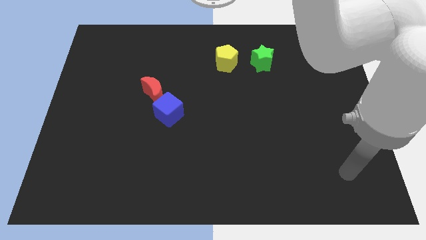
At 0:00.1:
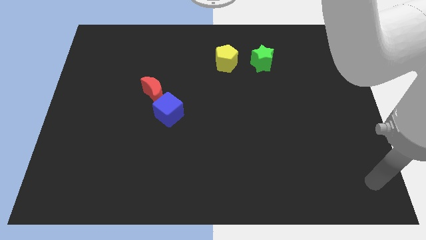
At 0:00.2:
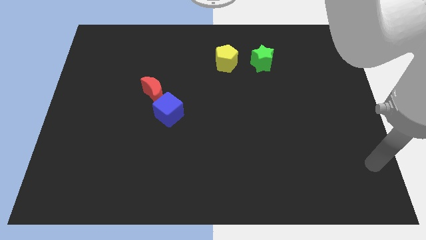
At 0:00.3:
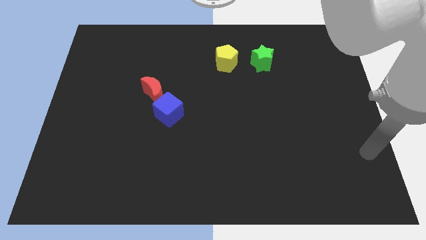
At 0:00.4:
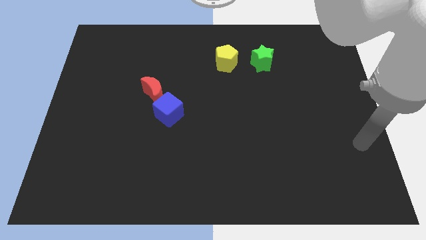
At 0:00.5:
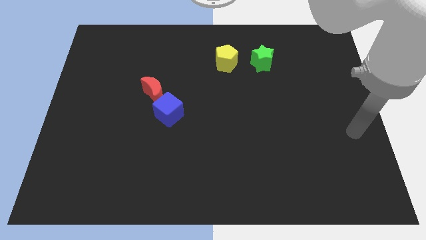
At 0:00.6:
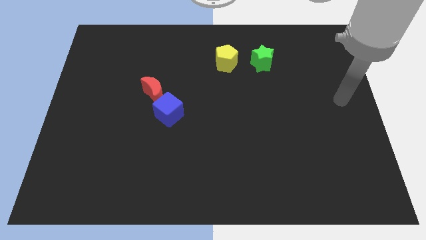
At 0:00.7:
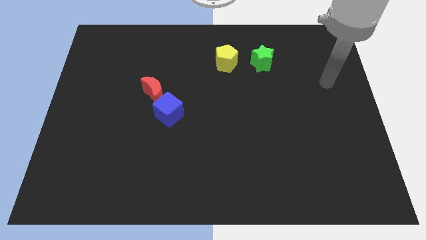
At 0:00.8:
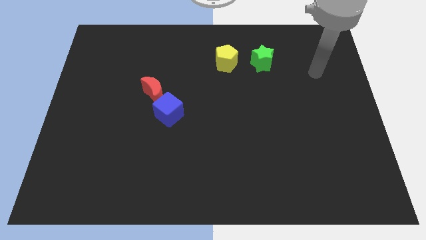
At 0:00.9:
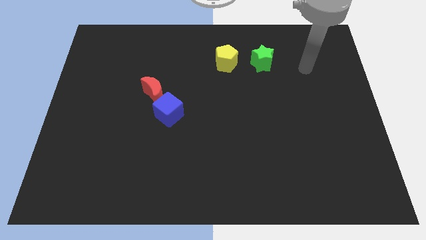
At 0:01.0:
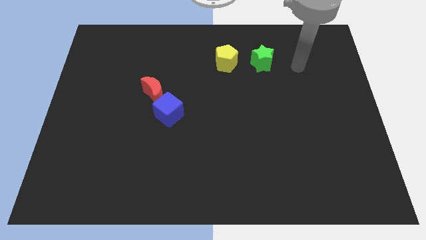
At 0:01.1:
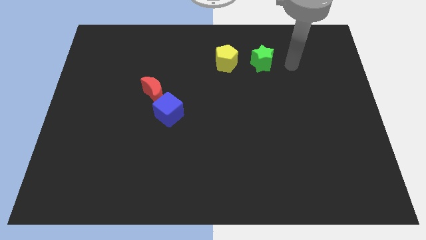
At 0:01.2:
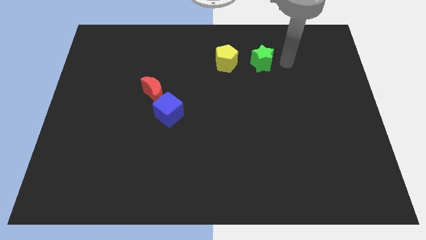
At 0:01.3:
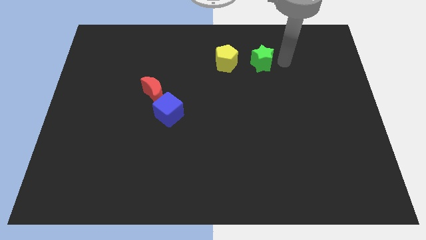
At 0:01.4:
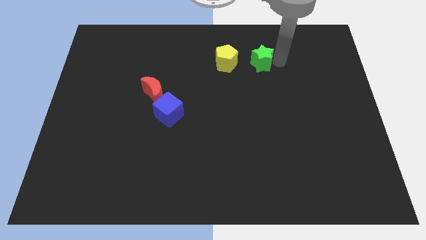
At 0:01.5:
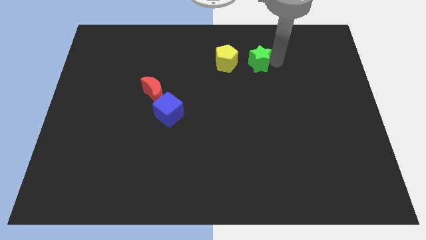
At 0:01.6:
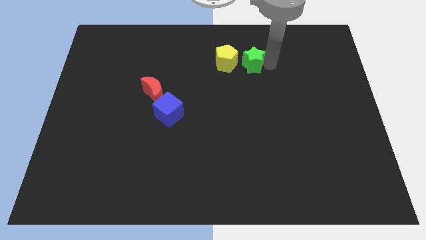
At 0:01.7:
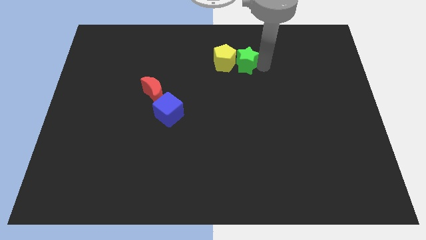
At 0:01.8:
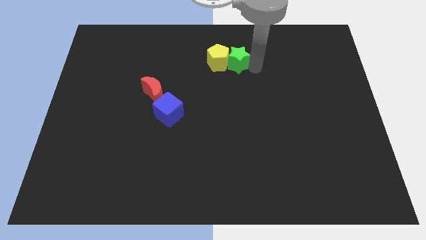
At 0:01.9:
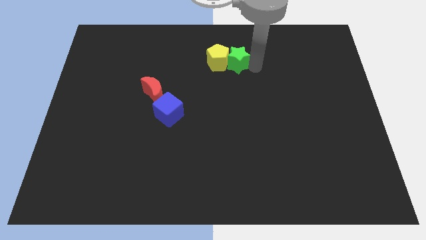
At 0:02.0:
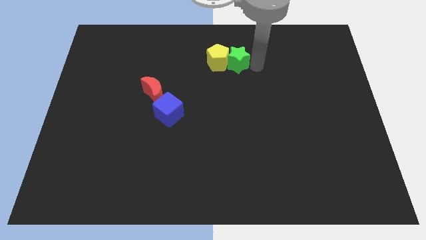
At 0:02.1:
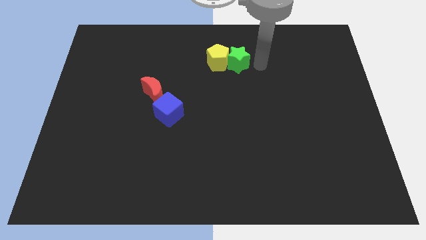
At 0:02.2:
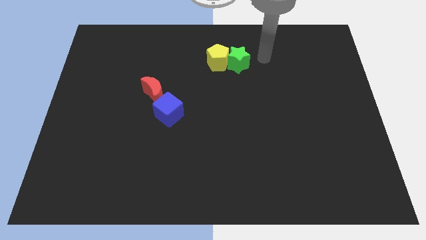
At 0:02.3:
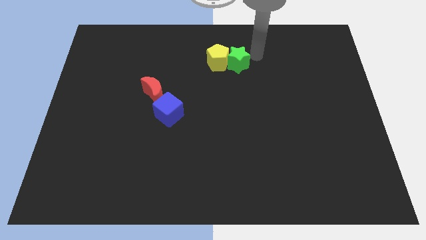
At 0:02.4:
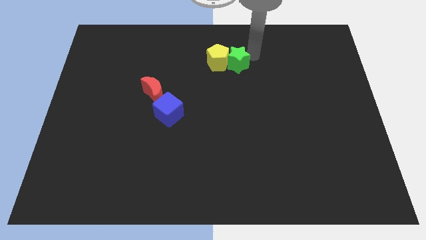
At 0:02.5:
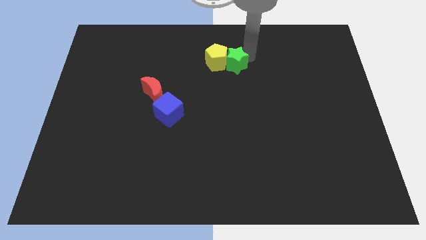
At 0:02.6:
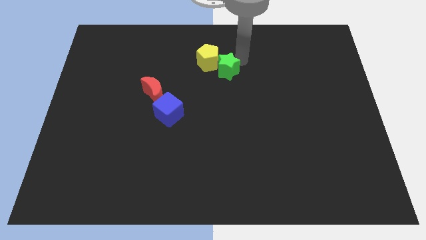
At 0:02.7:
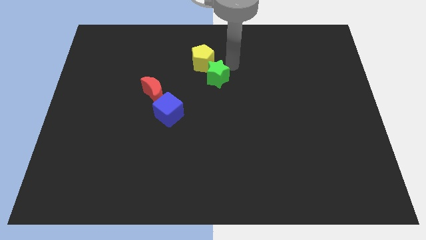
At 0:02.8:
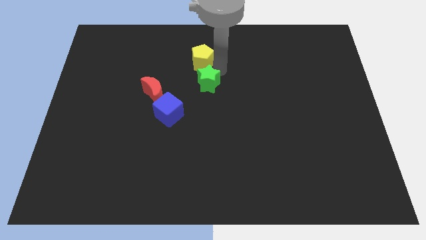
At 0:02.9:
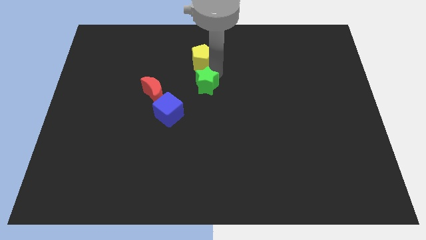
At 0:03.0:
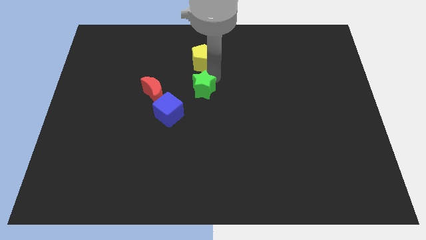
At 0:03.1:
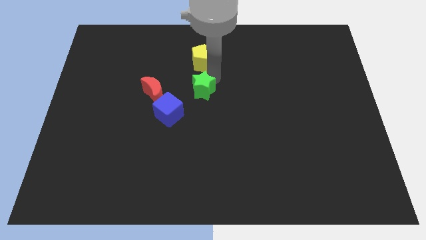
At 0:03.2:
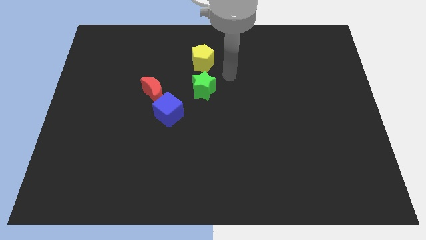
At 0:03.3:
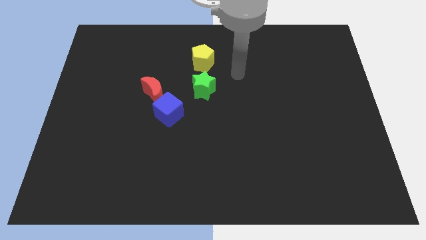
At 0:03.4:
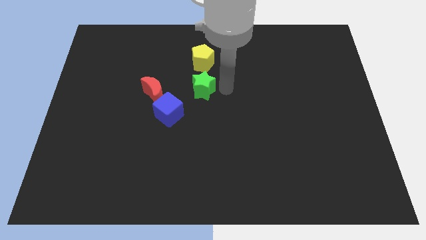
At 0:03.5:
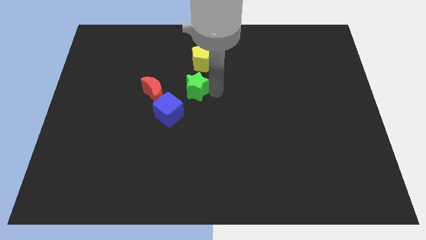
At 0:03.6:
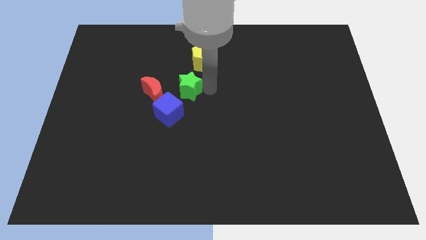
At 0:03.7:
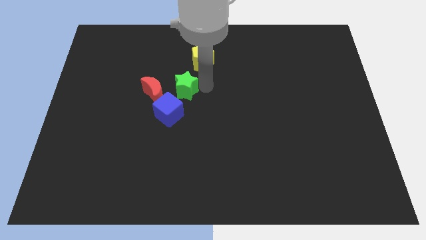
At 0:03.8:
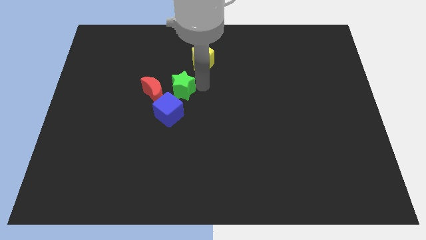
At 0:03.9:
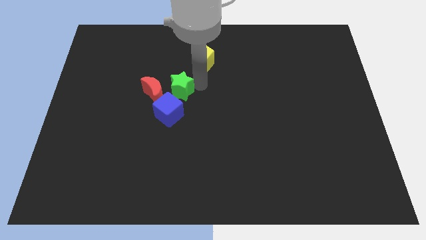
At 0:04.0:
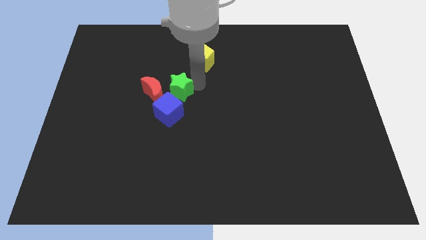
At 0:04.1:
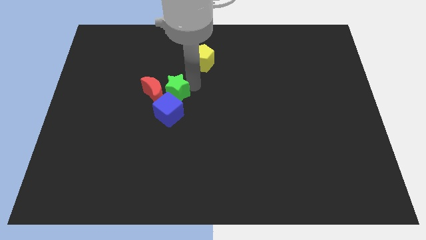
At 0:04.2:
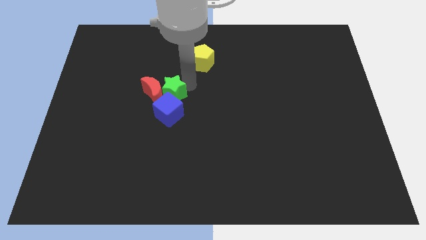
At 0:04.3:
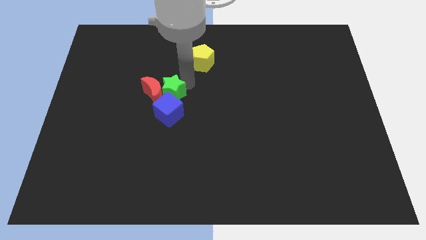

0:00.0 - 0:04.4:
put the green star next to the red moon

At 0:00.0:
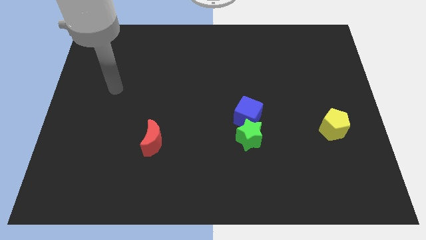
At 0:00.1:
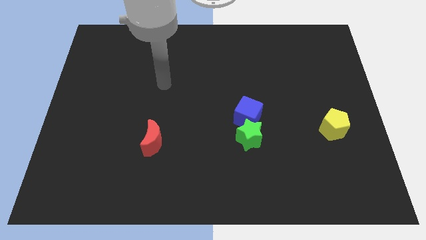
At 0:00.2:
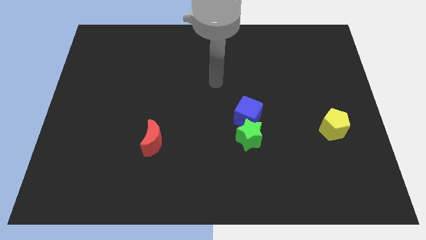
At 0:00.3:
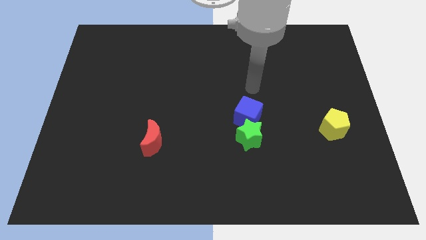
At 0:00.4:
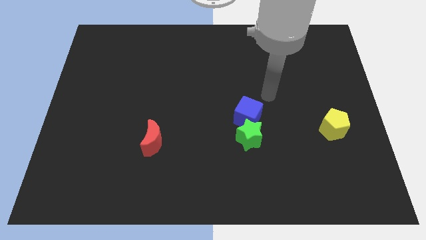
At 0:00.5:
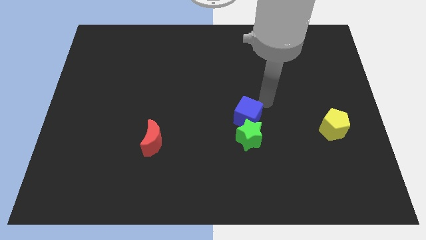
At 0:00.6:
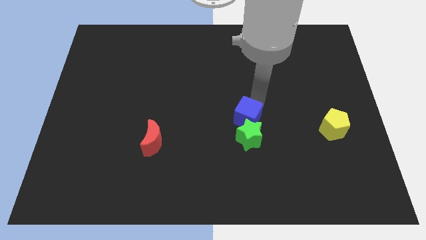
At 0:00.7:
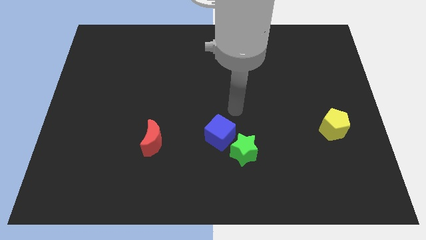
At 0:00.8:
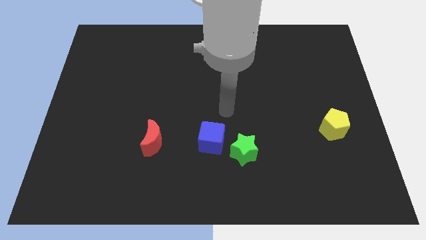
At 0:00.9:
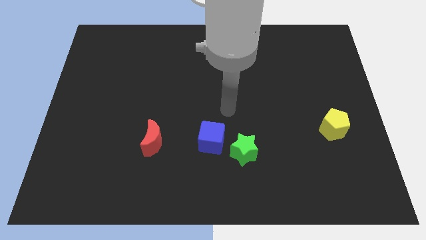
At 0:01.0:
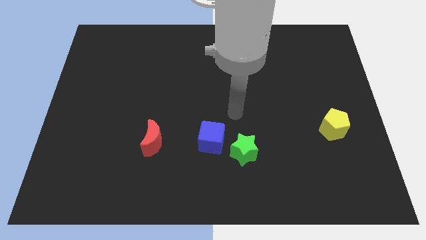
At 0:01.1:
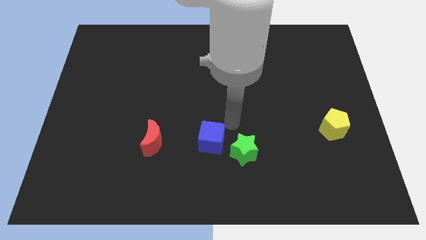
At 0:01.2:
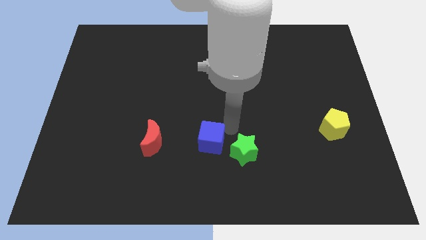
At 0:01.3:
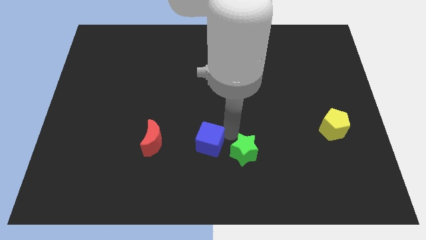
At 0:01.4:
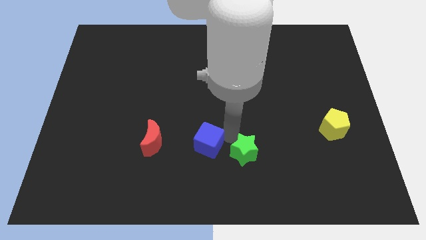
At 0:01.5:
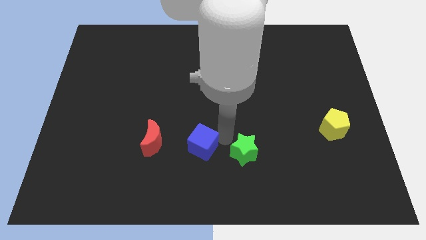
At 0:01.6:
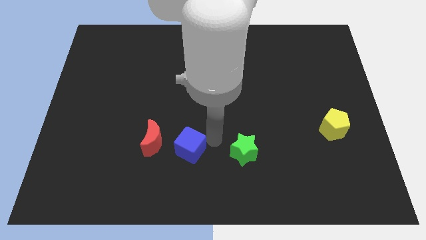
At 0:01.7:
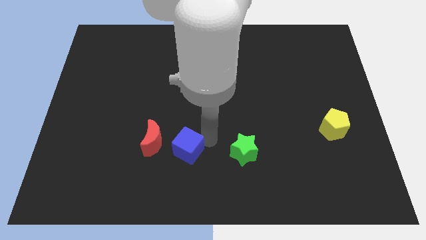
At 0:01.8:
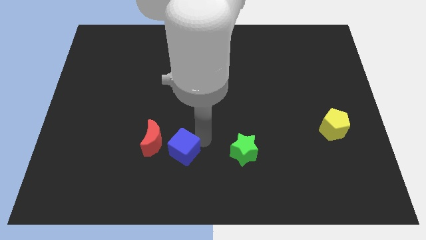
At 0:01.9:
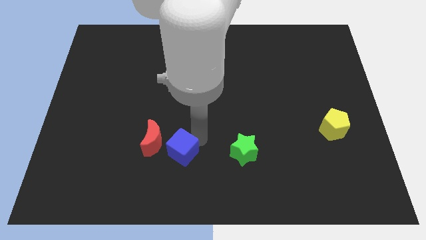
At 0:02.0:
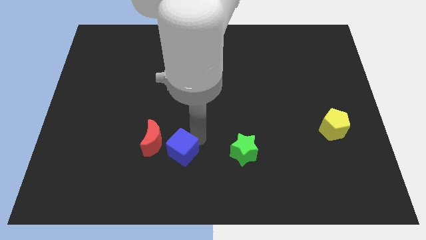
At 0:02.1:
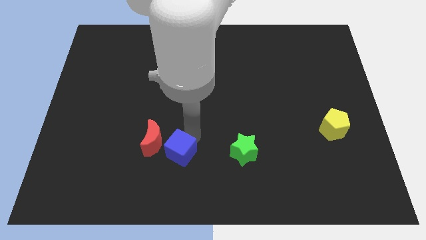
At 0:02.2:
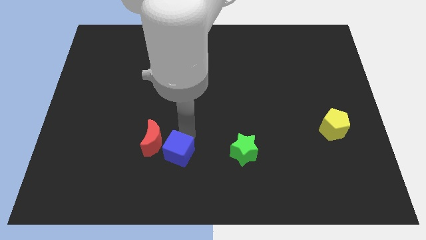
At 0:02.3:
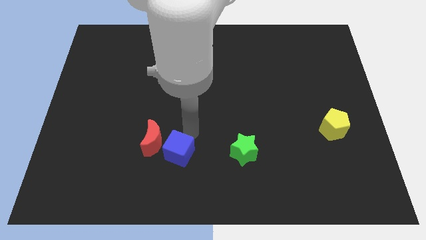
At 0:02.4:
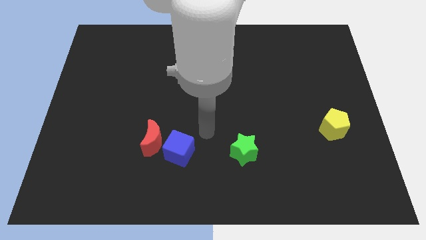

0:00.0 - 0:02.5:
move the cube to the red block

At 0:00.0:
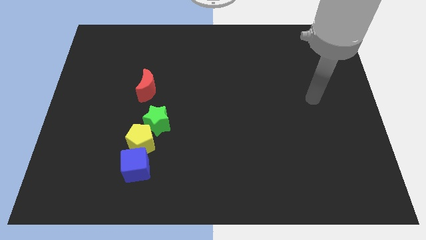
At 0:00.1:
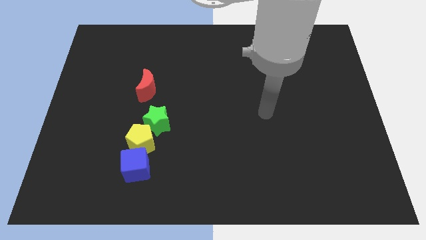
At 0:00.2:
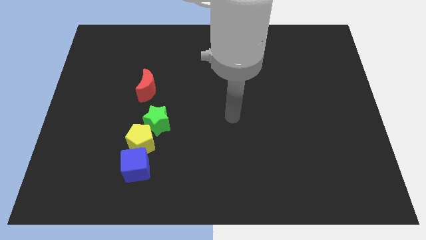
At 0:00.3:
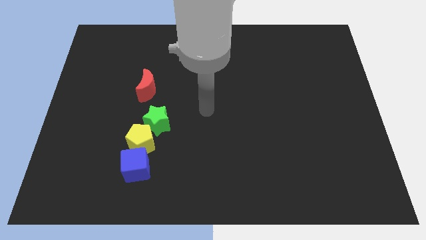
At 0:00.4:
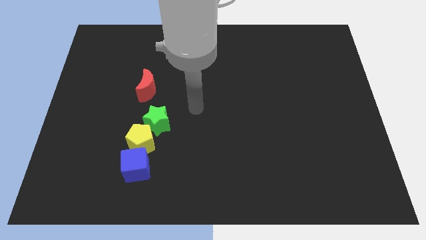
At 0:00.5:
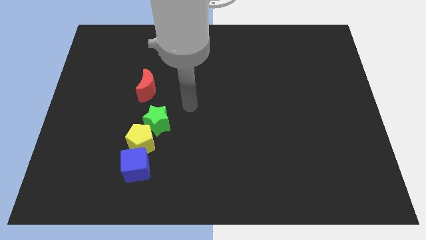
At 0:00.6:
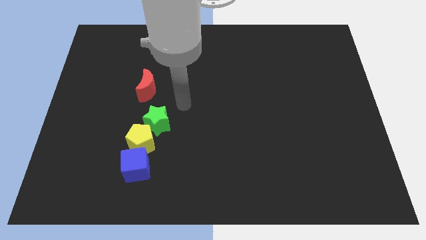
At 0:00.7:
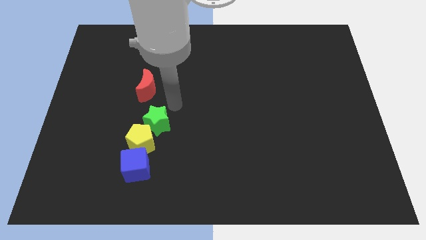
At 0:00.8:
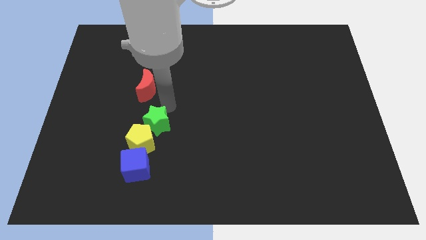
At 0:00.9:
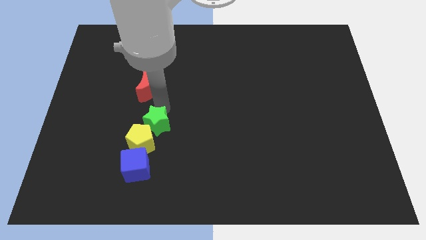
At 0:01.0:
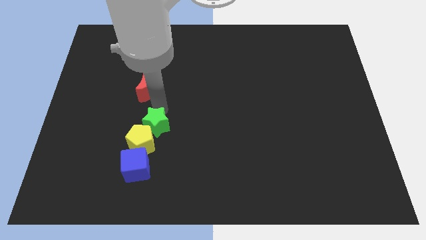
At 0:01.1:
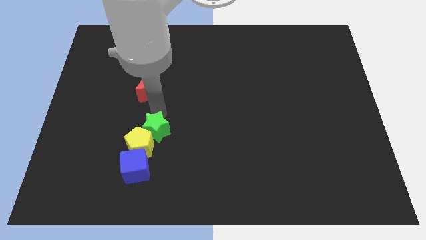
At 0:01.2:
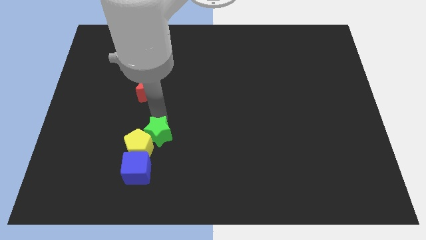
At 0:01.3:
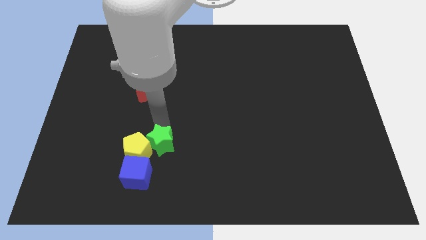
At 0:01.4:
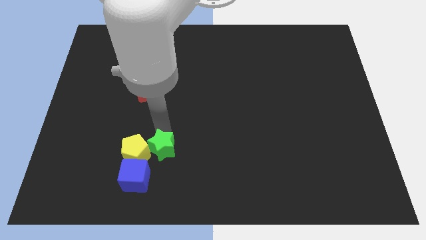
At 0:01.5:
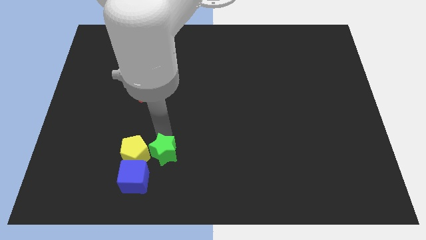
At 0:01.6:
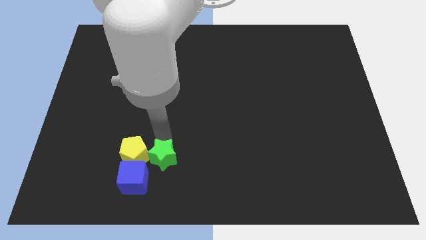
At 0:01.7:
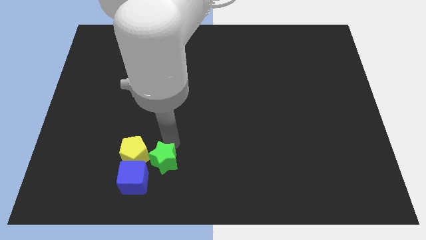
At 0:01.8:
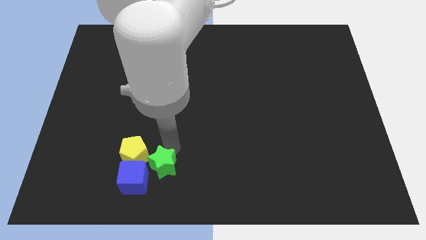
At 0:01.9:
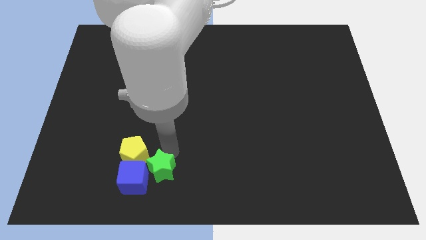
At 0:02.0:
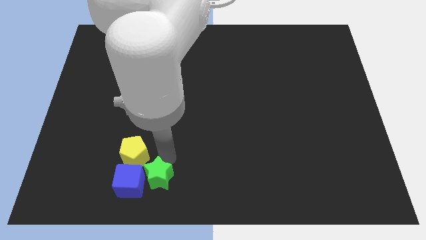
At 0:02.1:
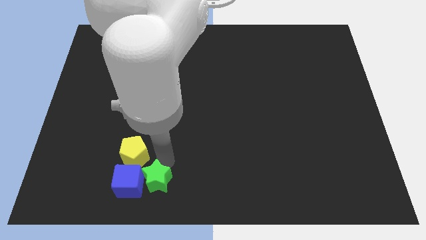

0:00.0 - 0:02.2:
move the star to the blue cube
